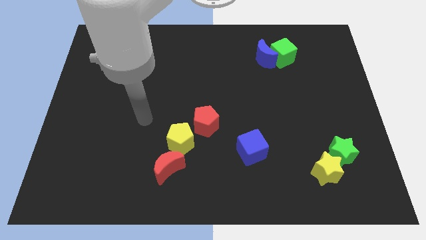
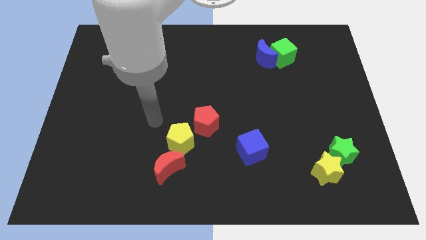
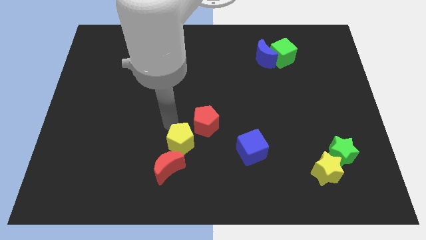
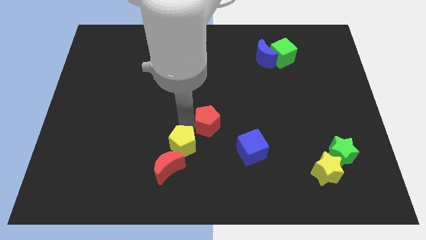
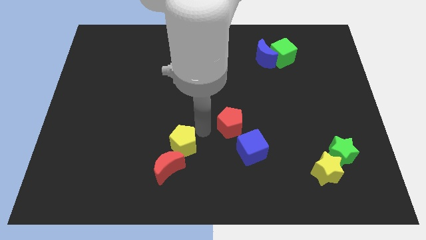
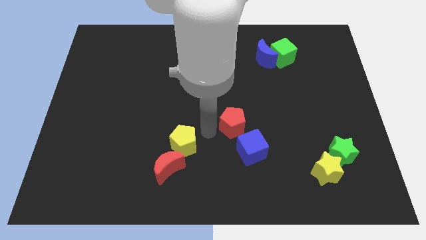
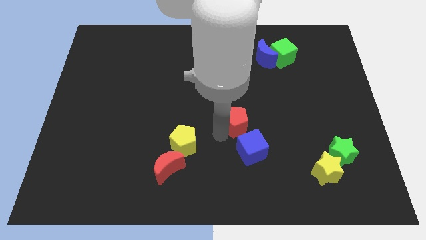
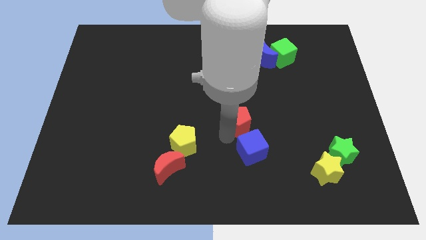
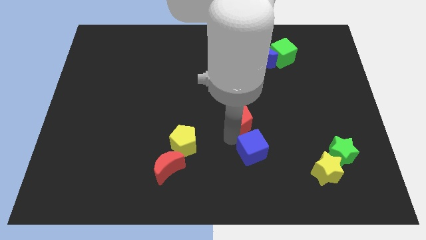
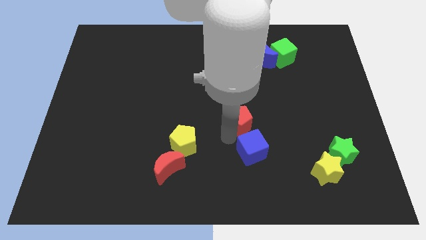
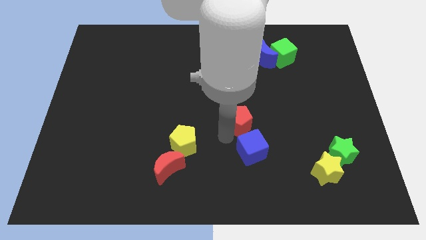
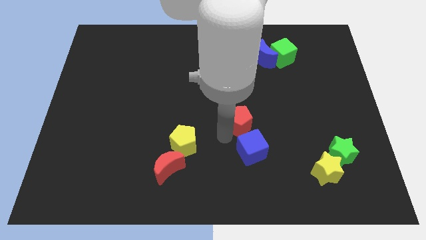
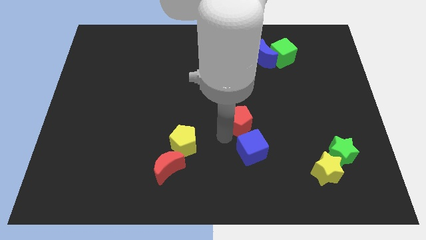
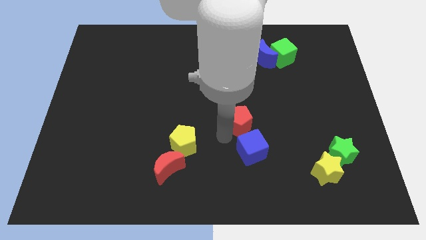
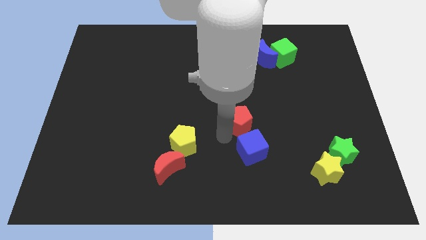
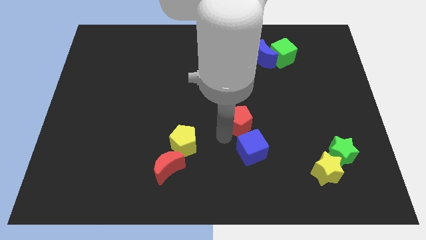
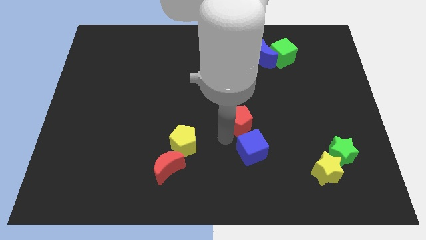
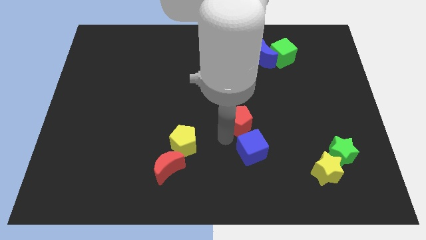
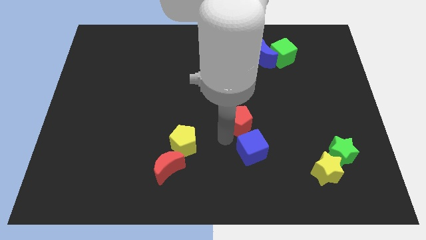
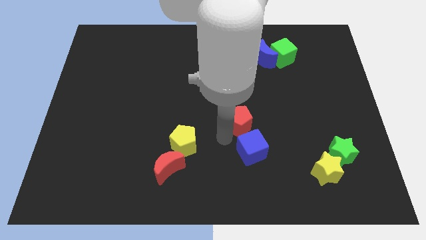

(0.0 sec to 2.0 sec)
separate yellow pentagon and red pentagon

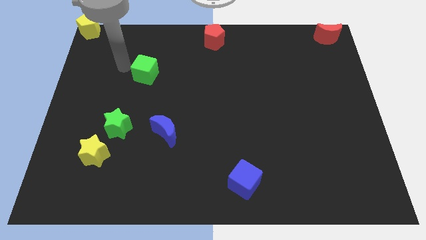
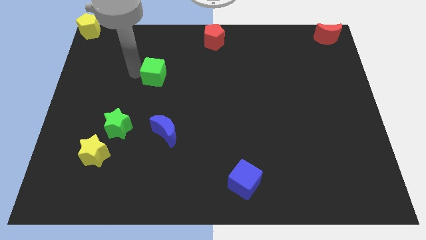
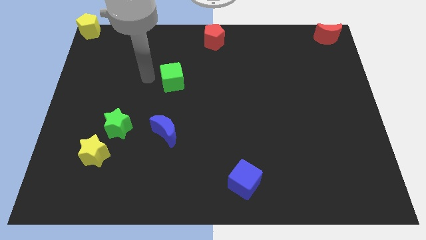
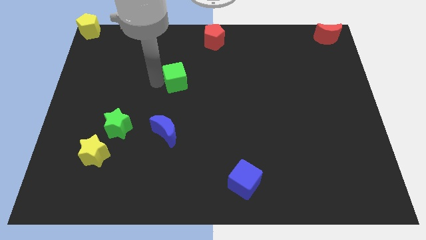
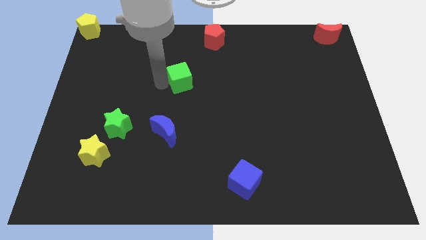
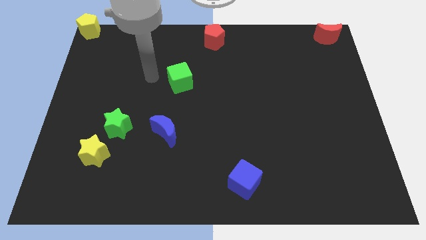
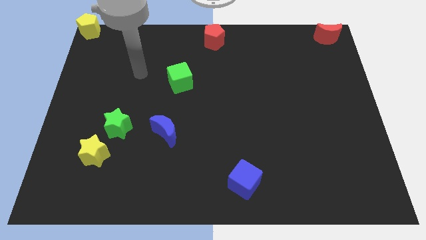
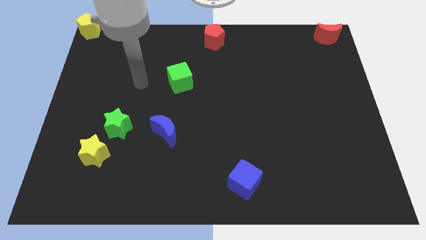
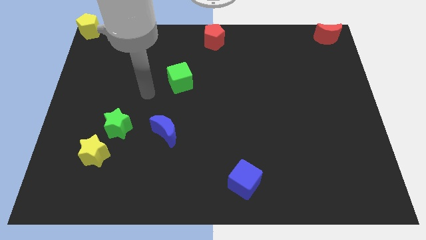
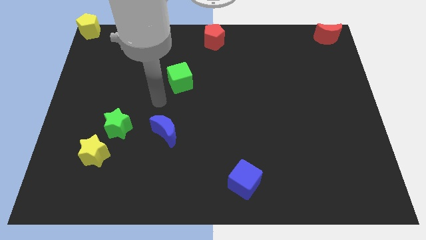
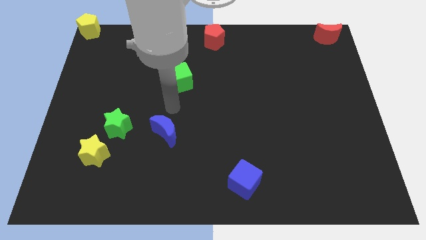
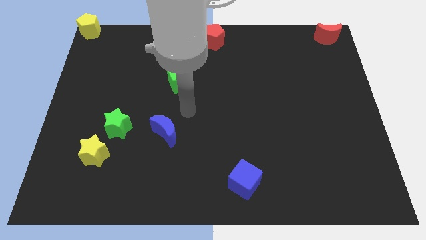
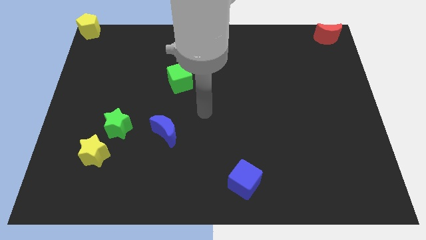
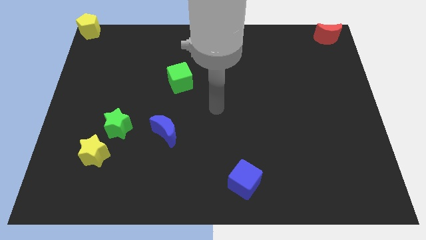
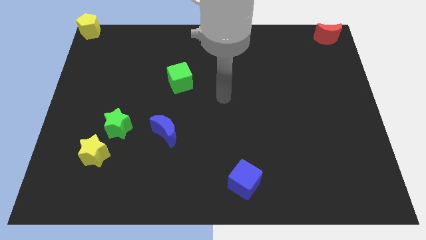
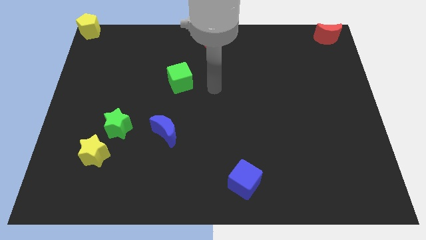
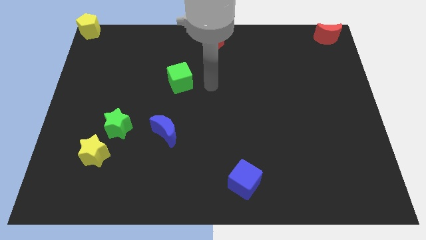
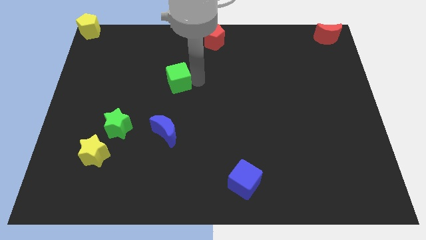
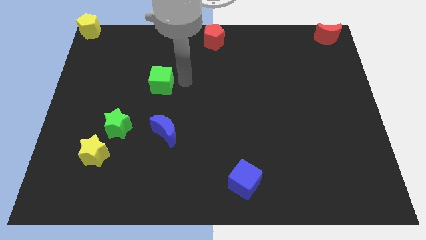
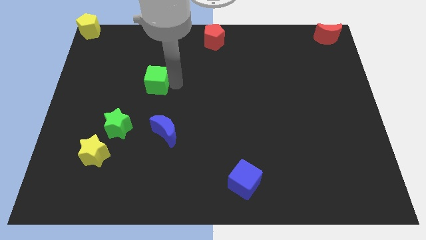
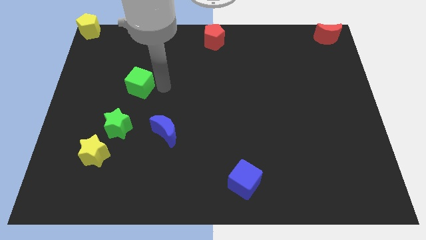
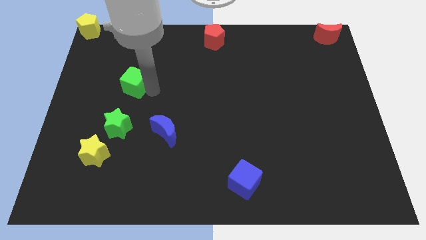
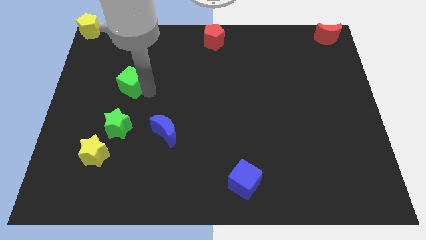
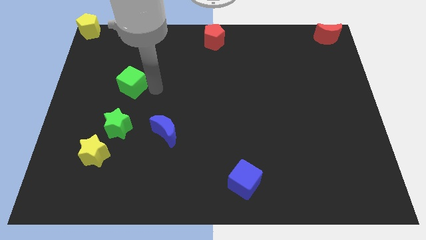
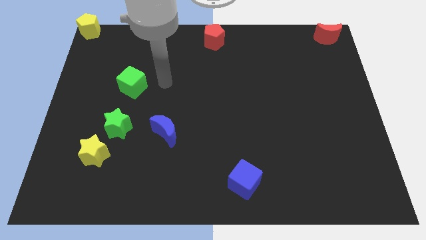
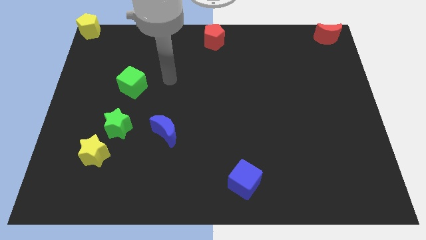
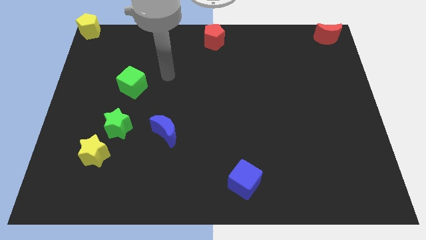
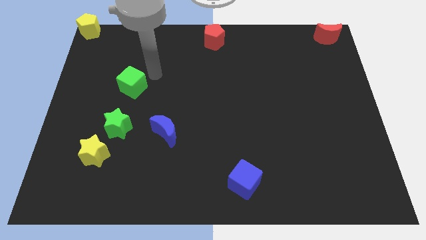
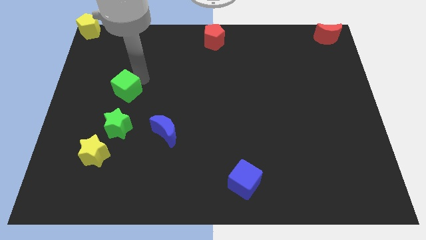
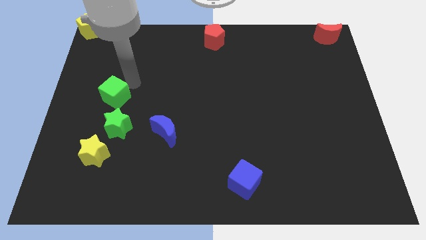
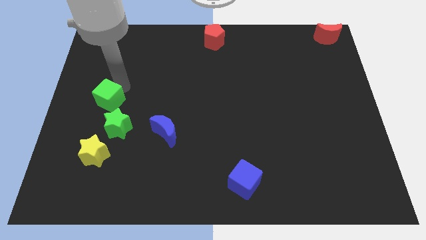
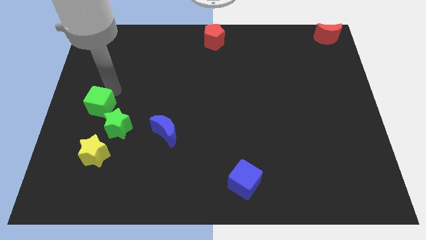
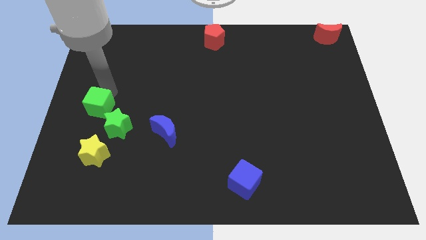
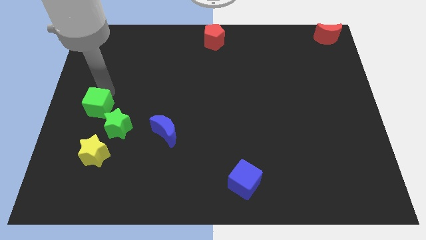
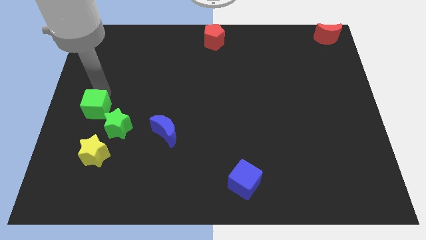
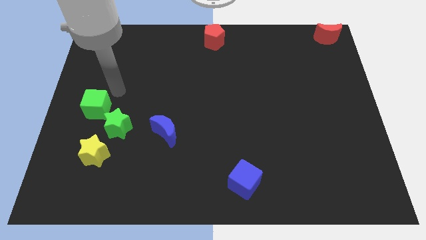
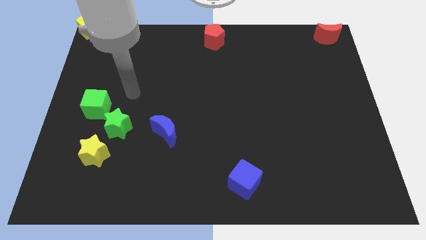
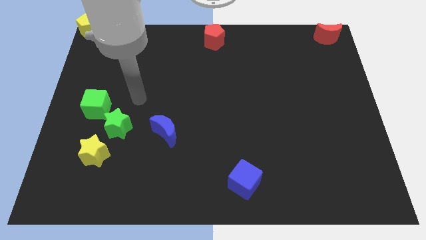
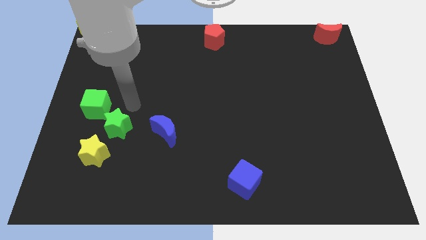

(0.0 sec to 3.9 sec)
put the green cube diagonally left to the star

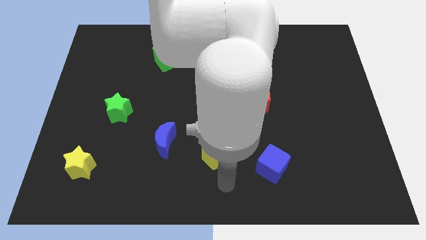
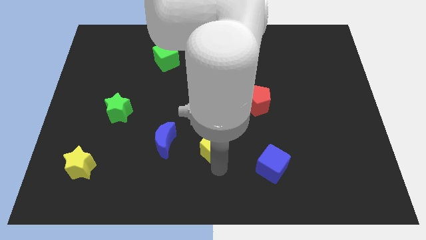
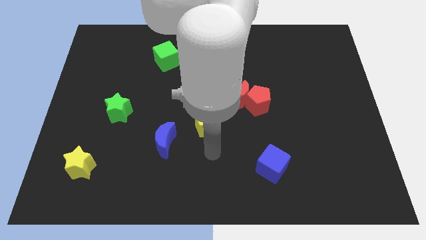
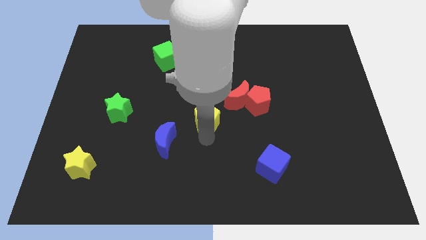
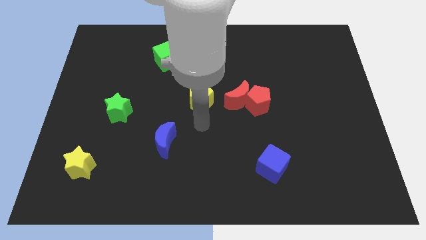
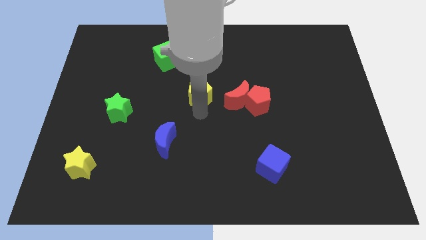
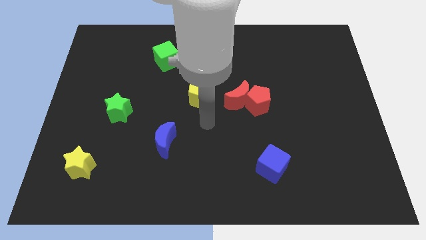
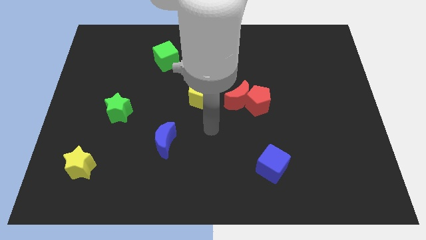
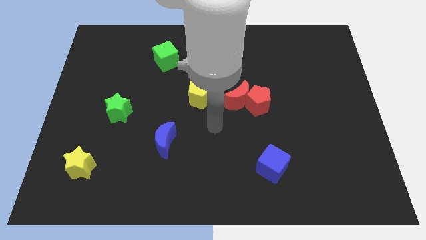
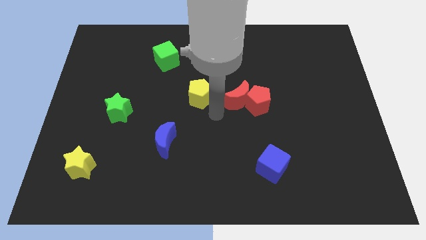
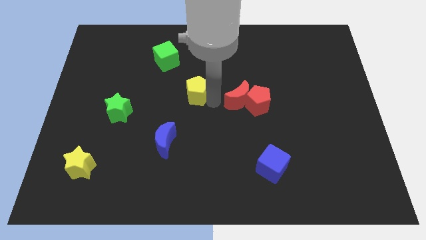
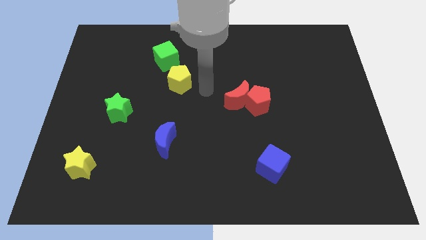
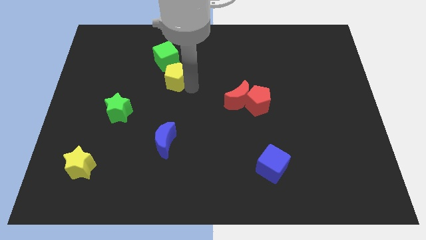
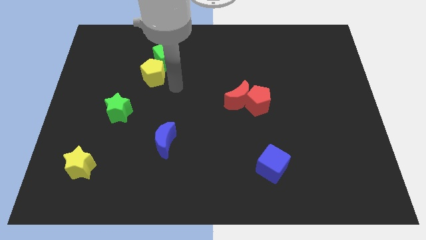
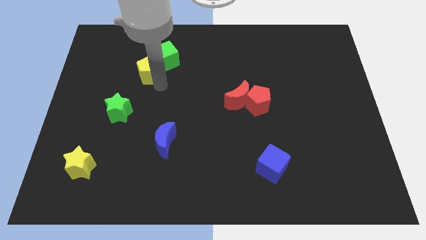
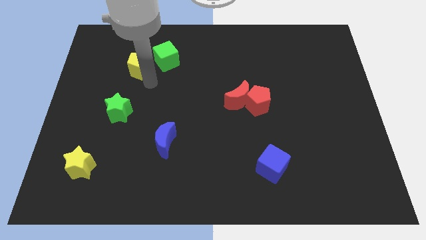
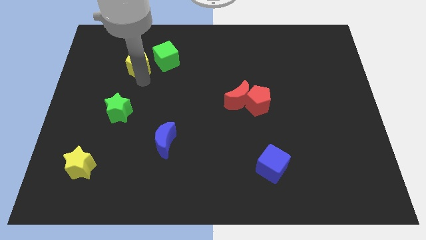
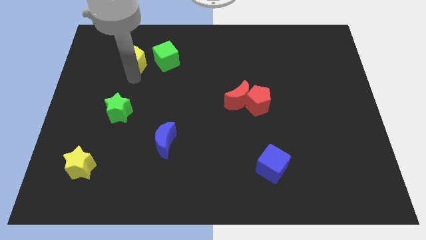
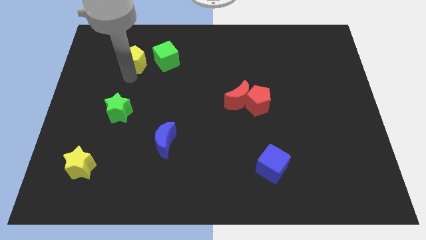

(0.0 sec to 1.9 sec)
place the yellow pentagon left to the green cube

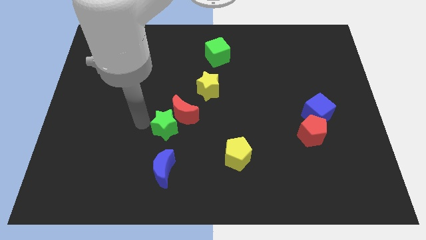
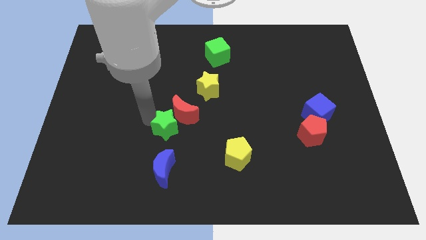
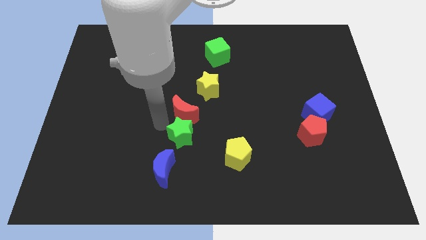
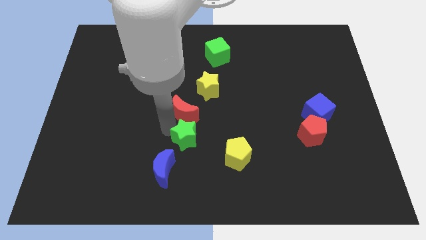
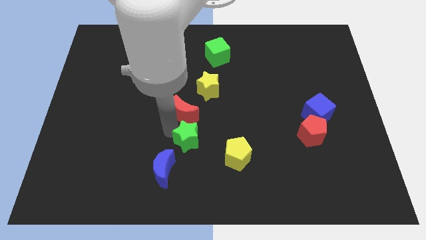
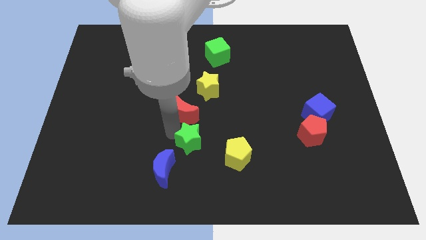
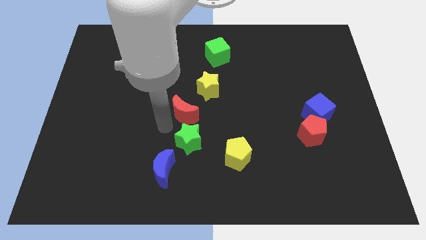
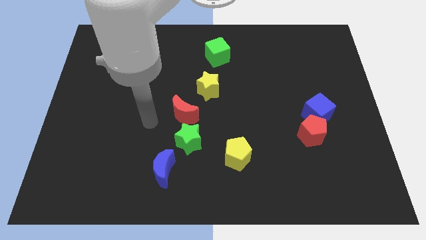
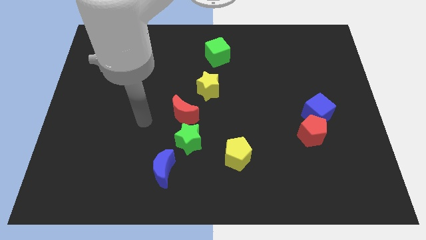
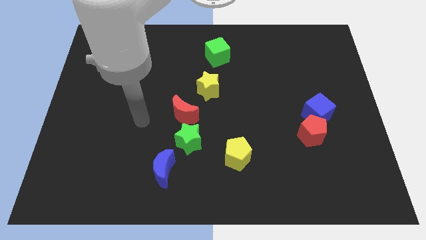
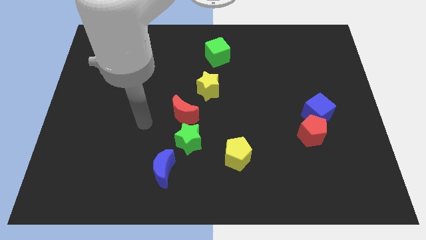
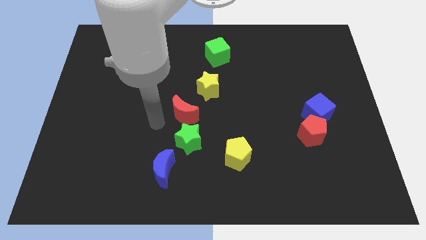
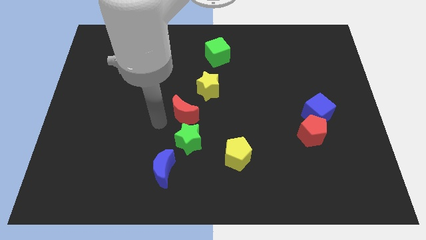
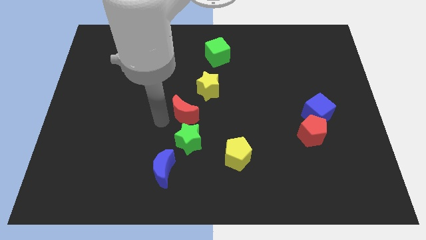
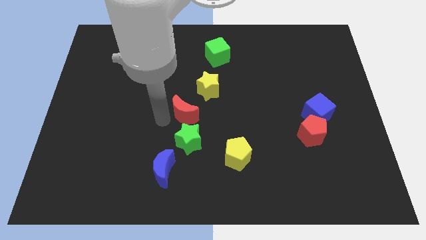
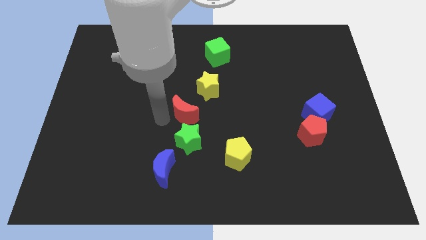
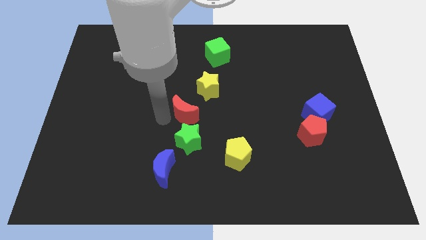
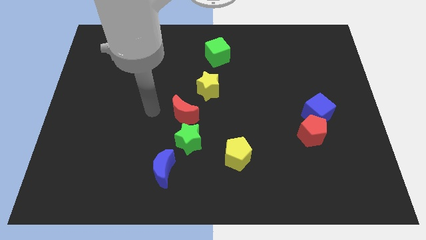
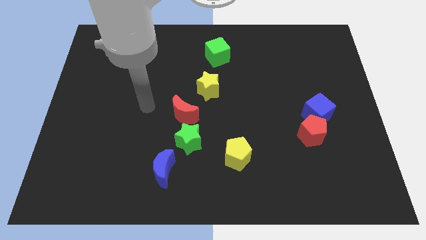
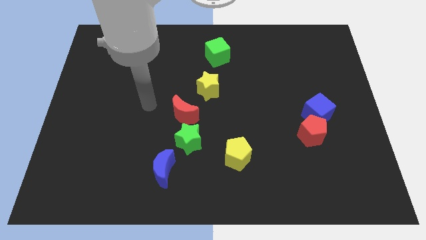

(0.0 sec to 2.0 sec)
move the green star to the bottom of the red crescent
